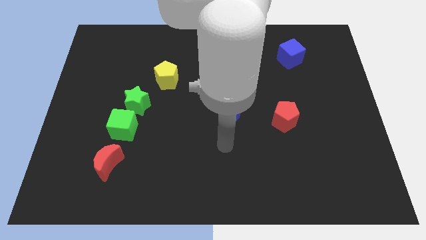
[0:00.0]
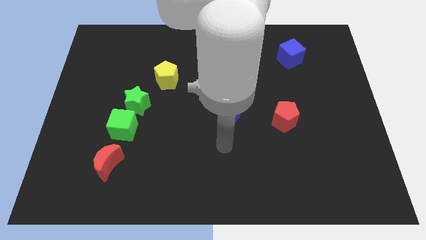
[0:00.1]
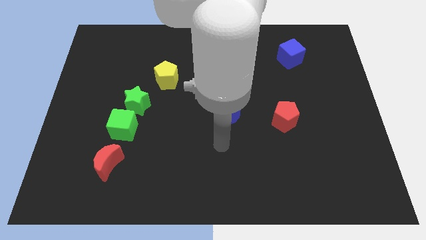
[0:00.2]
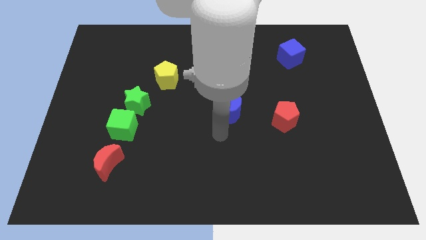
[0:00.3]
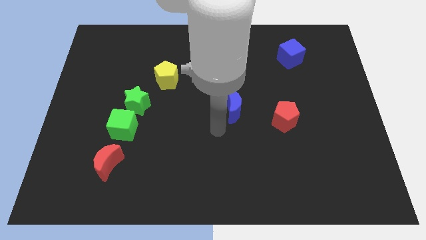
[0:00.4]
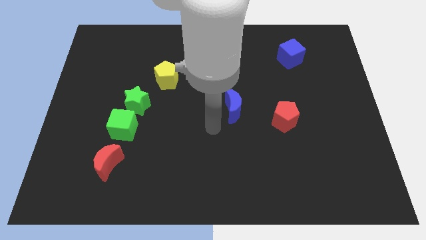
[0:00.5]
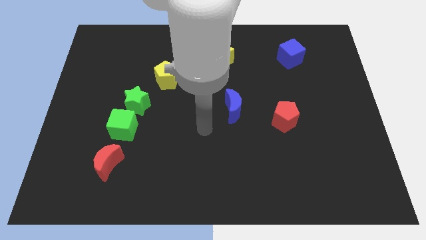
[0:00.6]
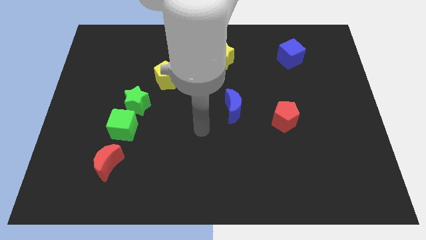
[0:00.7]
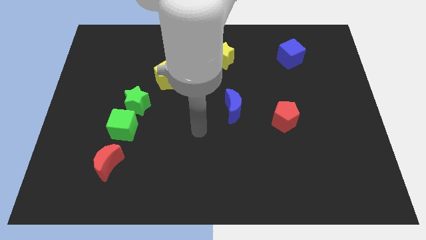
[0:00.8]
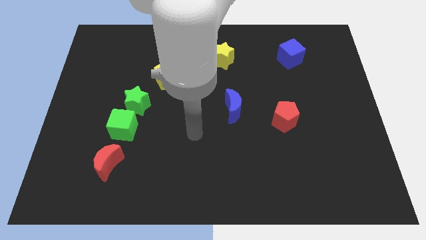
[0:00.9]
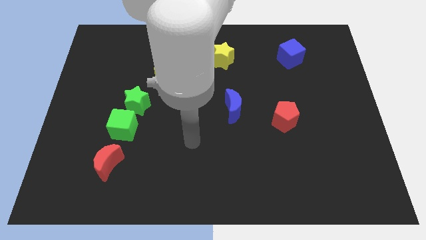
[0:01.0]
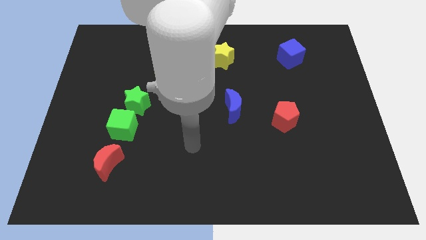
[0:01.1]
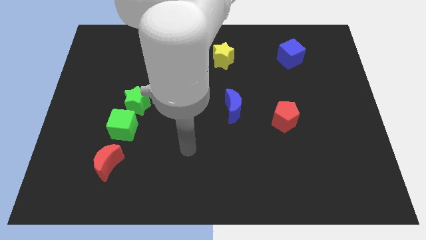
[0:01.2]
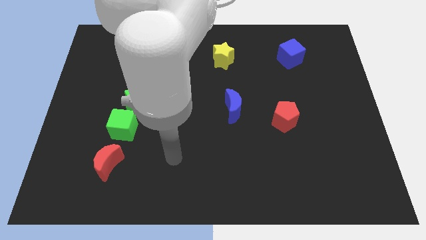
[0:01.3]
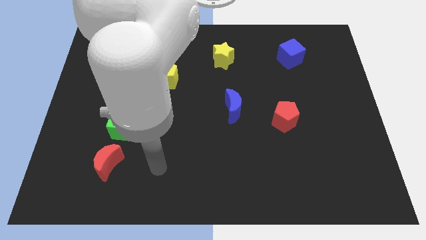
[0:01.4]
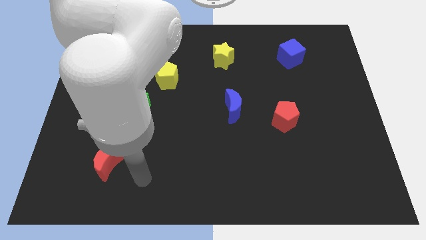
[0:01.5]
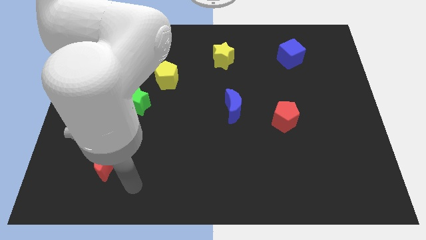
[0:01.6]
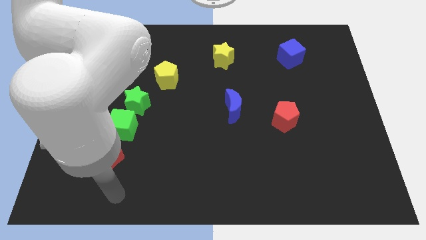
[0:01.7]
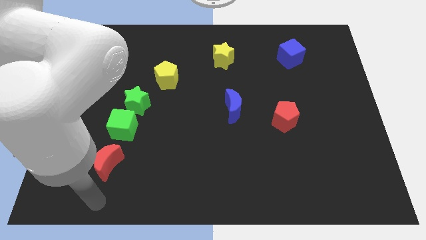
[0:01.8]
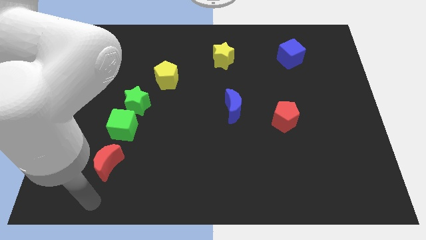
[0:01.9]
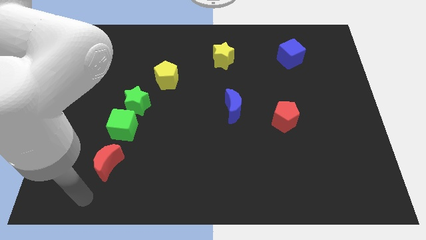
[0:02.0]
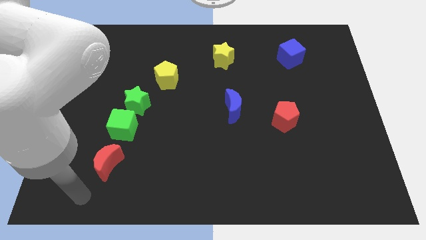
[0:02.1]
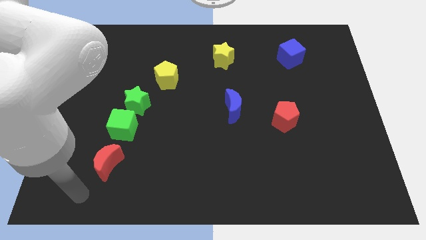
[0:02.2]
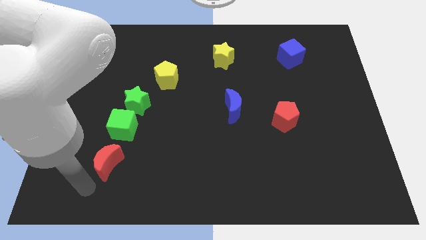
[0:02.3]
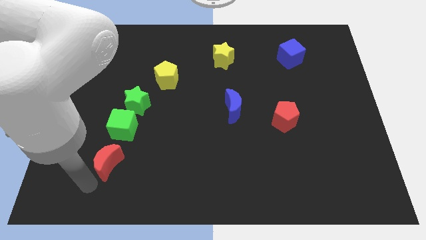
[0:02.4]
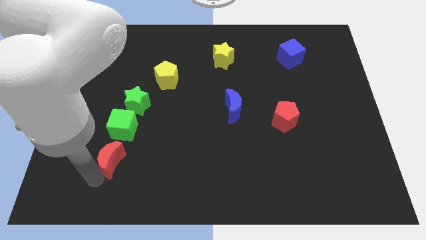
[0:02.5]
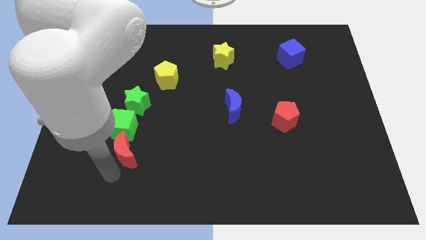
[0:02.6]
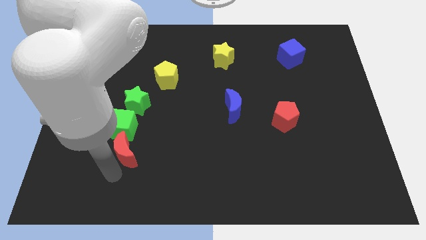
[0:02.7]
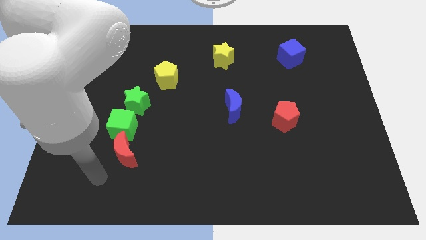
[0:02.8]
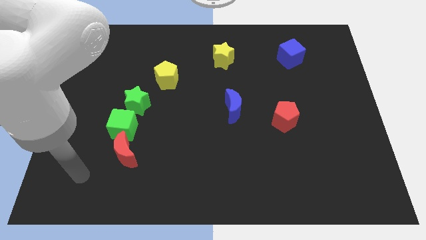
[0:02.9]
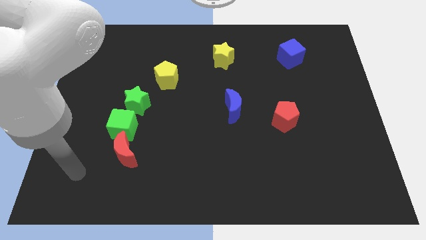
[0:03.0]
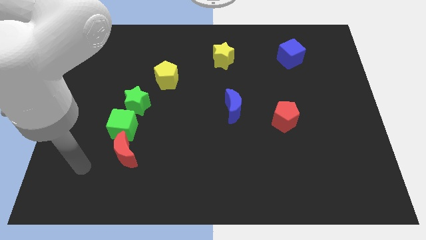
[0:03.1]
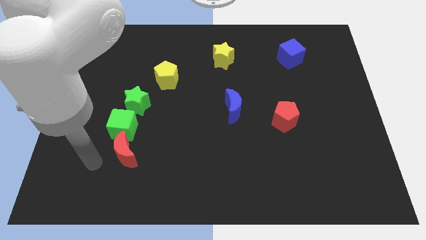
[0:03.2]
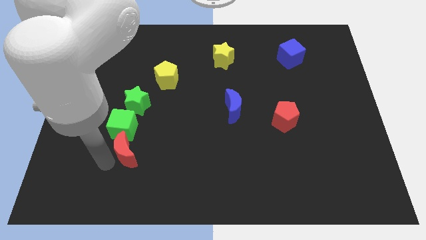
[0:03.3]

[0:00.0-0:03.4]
move the red crescent into the green cube

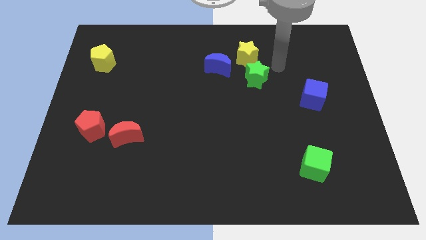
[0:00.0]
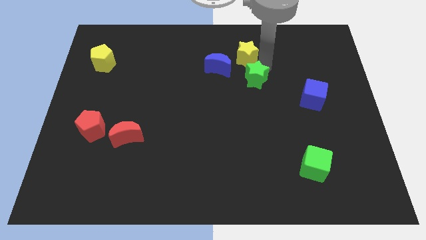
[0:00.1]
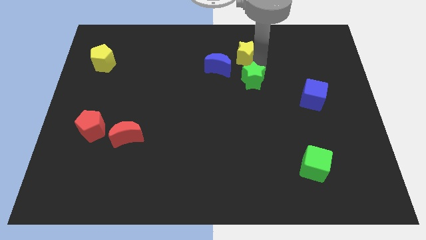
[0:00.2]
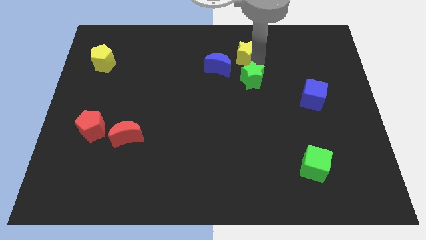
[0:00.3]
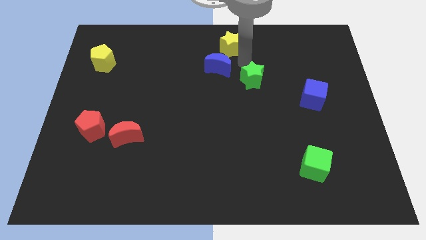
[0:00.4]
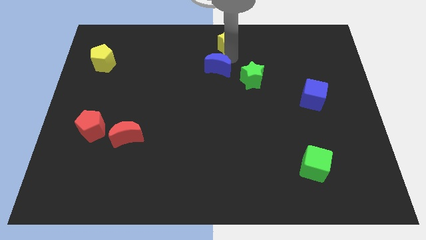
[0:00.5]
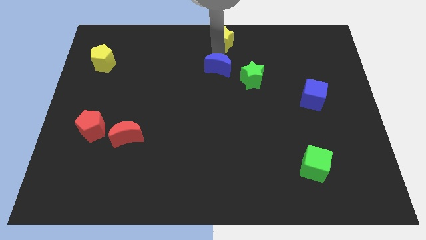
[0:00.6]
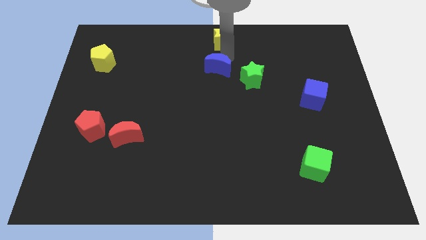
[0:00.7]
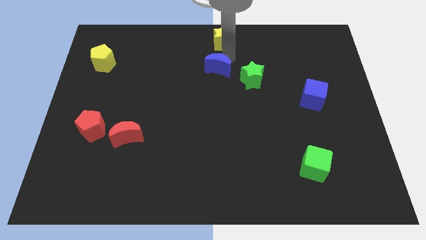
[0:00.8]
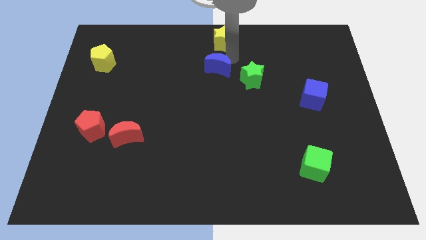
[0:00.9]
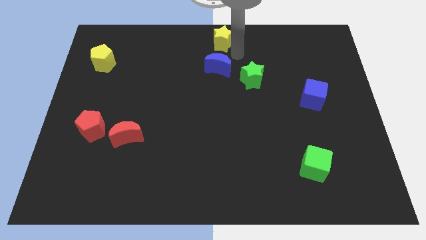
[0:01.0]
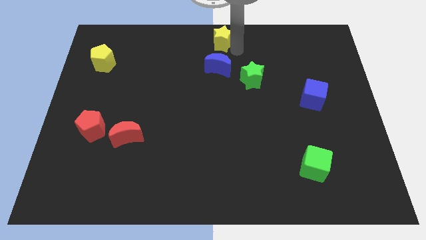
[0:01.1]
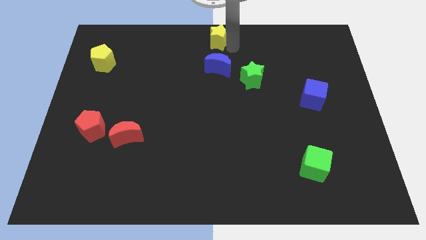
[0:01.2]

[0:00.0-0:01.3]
place the yellow star to the top center of the board

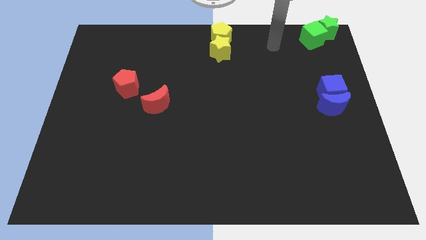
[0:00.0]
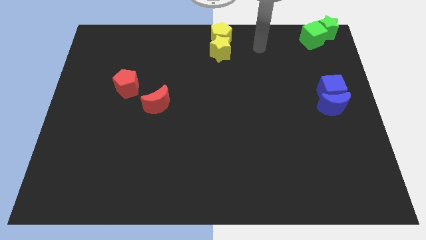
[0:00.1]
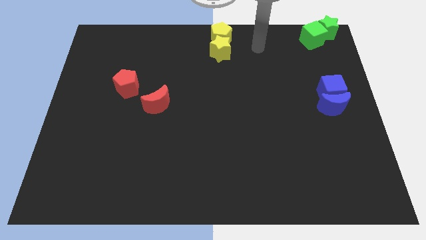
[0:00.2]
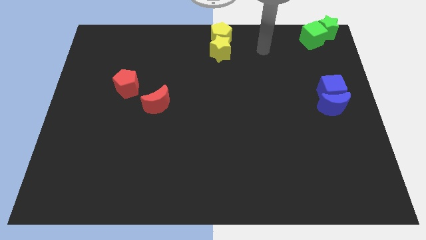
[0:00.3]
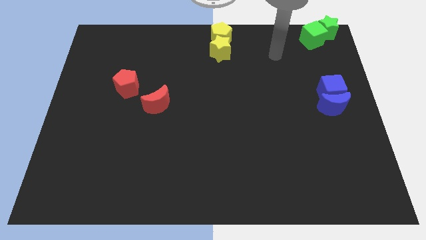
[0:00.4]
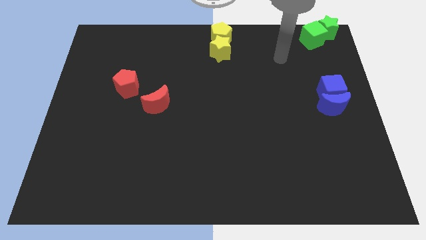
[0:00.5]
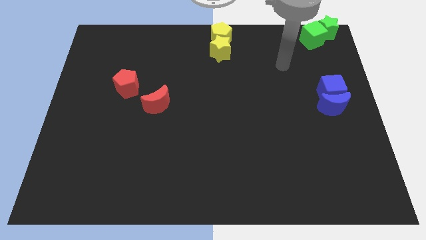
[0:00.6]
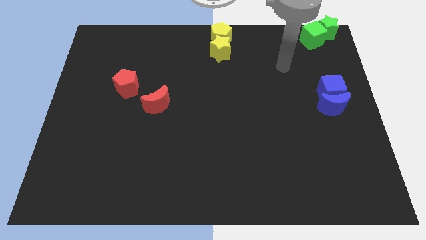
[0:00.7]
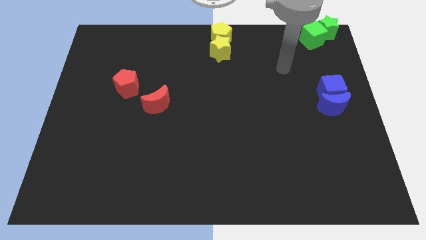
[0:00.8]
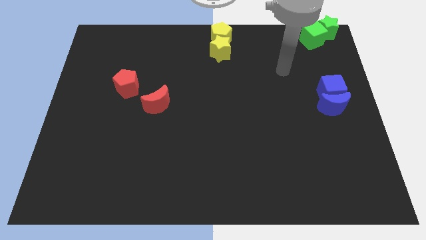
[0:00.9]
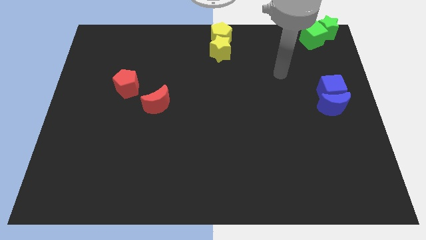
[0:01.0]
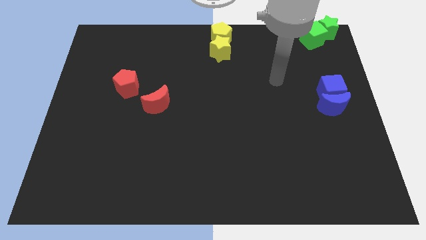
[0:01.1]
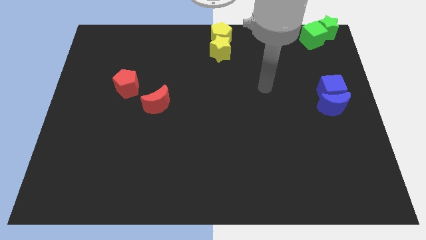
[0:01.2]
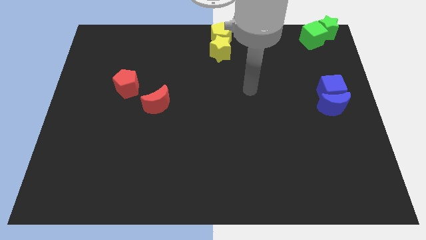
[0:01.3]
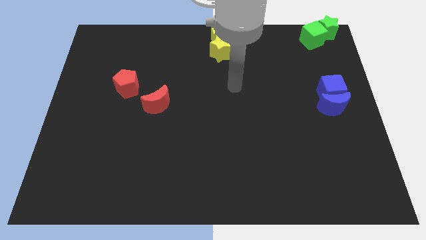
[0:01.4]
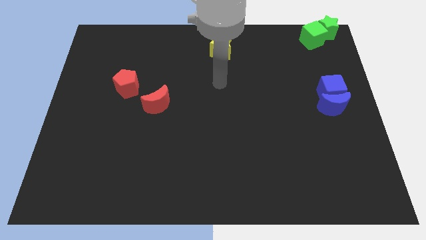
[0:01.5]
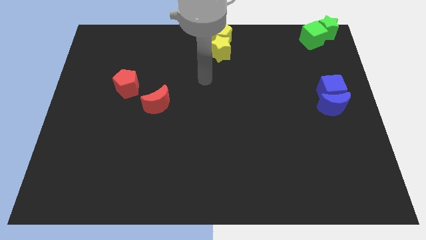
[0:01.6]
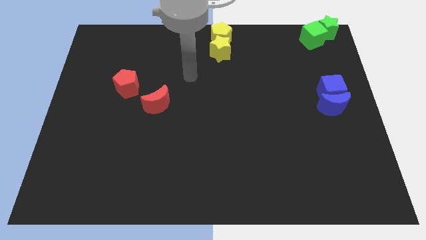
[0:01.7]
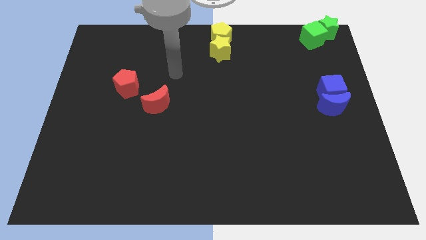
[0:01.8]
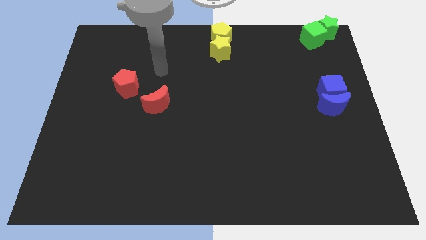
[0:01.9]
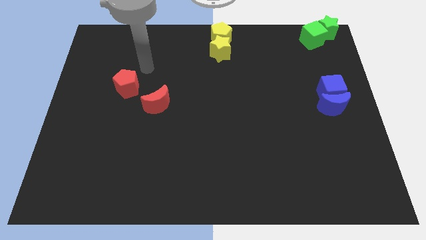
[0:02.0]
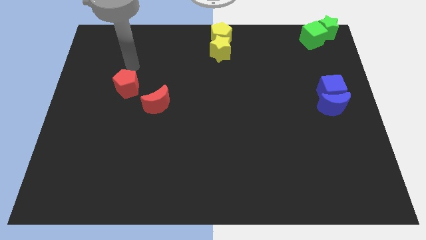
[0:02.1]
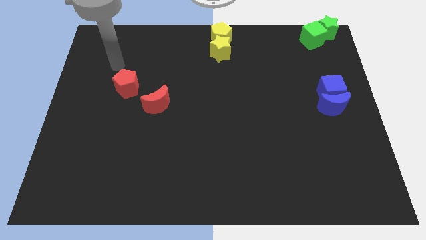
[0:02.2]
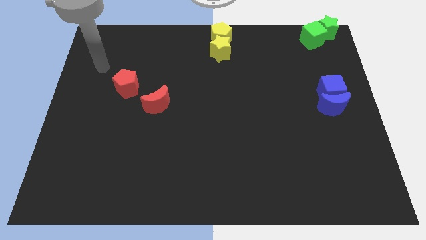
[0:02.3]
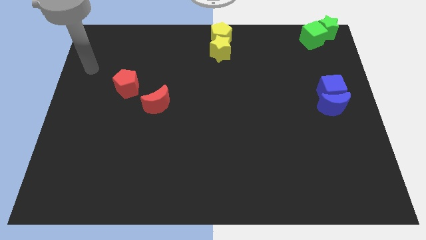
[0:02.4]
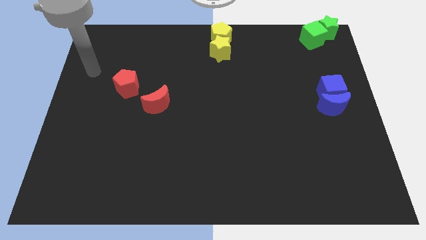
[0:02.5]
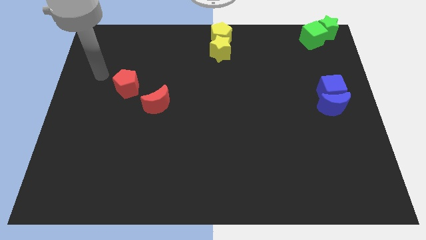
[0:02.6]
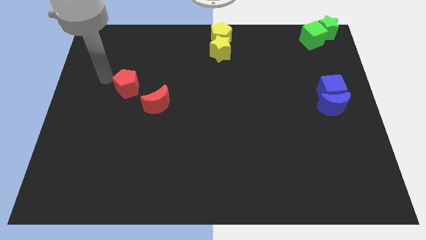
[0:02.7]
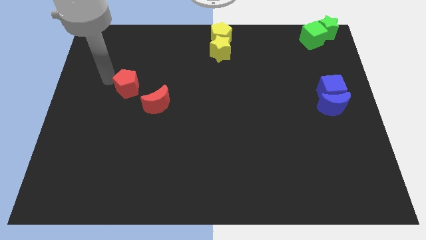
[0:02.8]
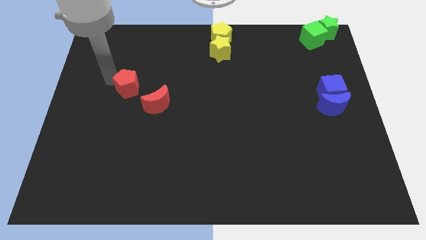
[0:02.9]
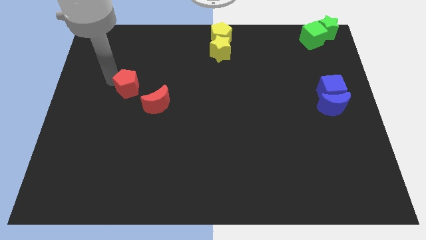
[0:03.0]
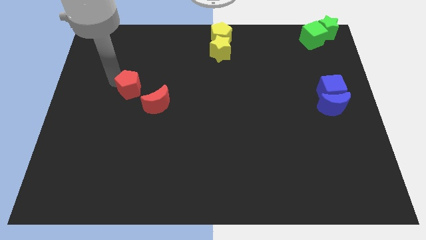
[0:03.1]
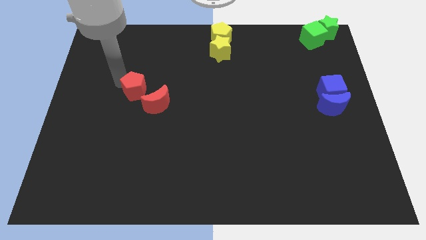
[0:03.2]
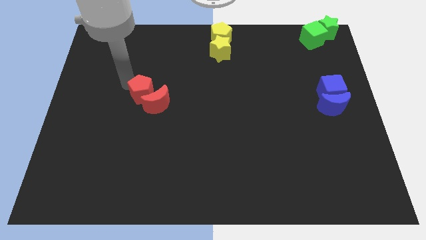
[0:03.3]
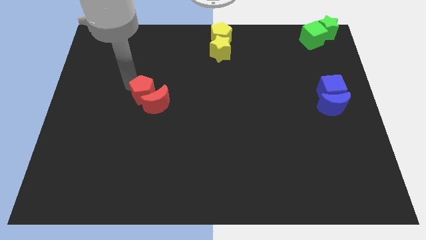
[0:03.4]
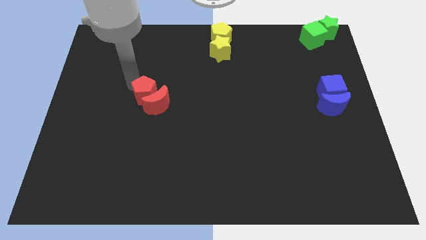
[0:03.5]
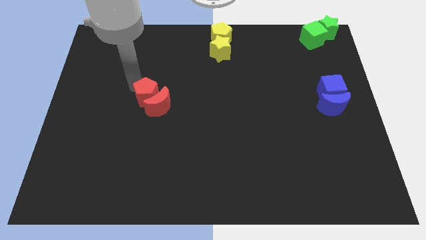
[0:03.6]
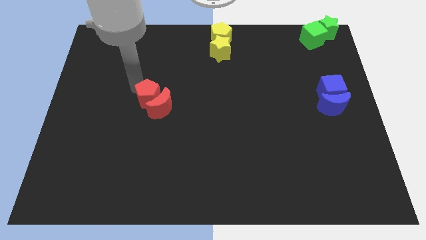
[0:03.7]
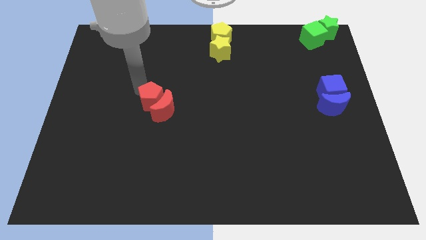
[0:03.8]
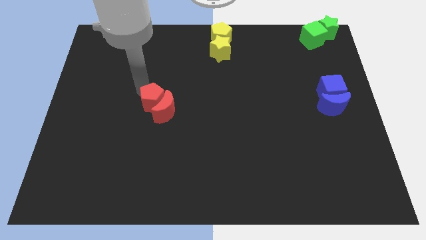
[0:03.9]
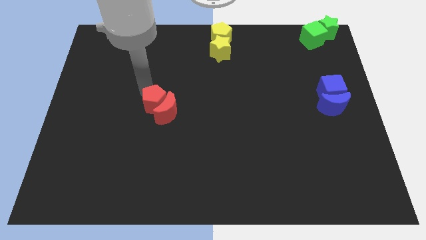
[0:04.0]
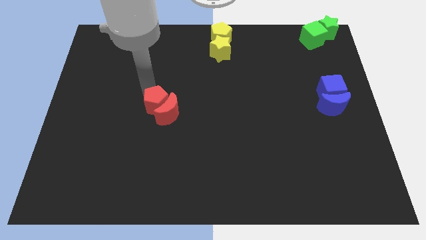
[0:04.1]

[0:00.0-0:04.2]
move the red pentagon to the left of the red crescent

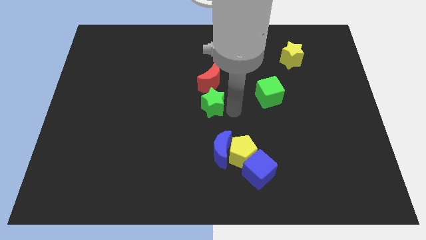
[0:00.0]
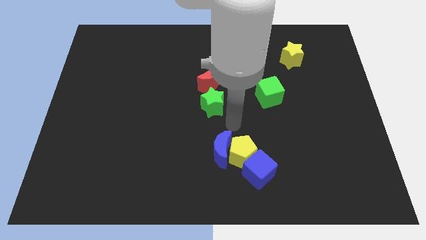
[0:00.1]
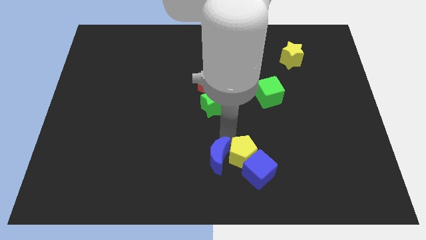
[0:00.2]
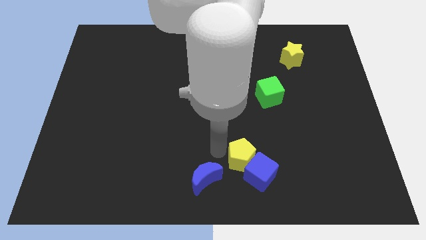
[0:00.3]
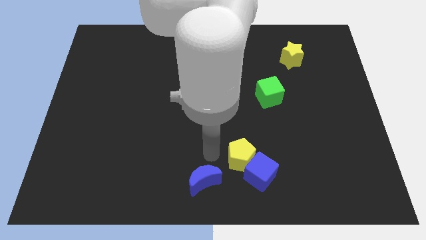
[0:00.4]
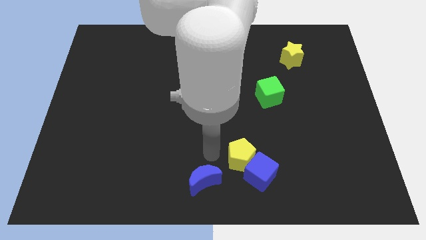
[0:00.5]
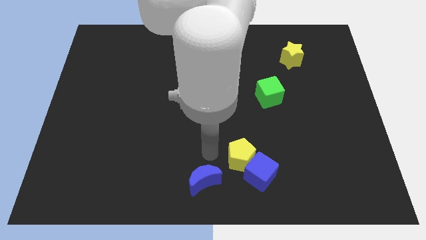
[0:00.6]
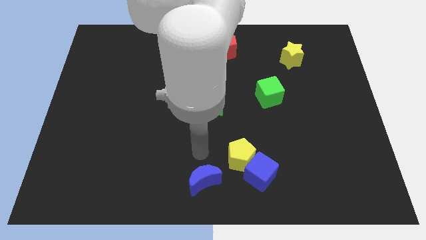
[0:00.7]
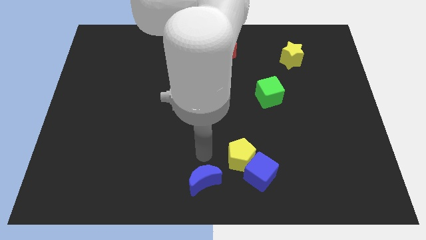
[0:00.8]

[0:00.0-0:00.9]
push the blue crescent to the bottom center
